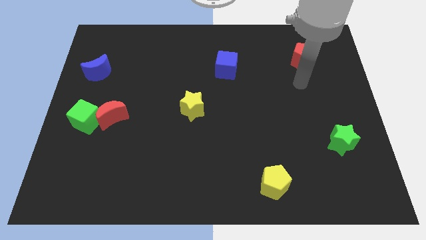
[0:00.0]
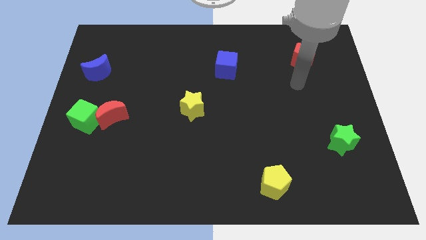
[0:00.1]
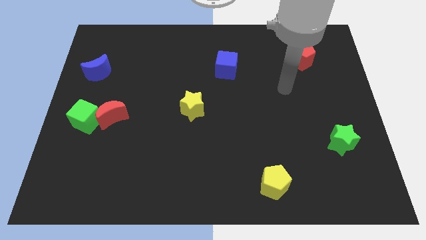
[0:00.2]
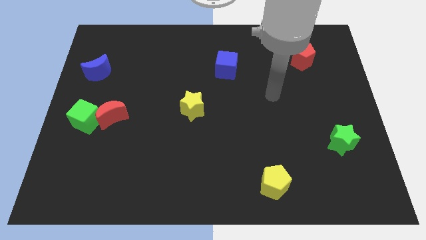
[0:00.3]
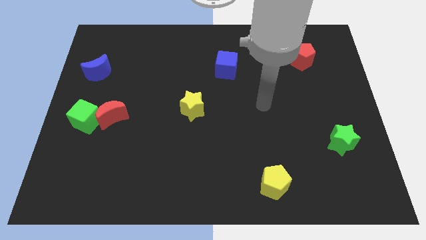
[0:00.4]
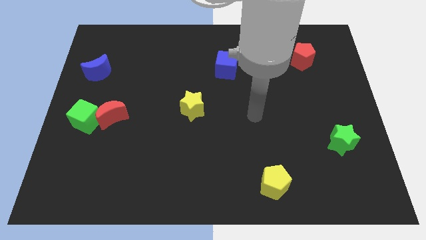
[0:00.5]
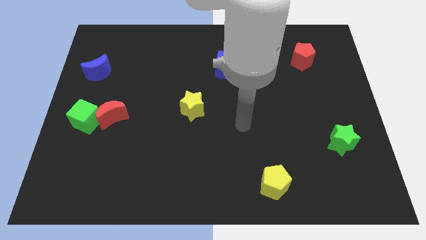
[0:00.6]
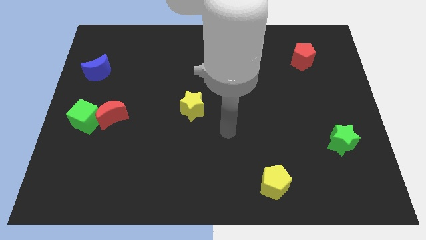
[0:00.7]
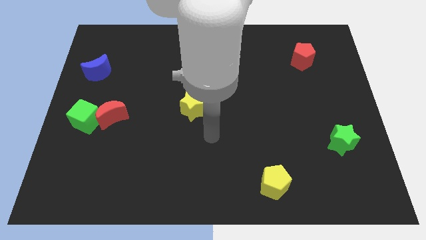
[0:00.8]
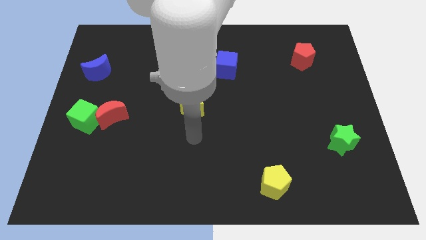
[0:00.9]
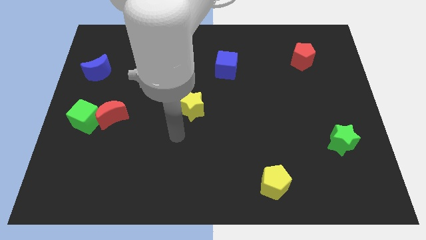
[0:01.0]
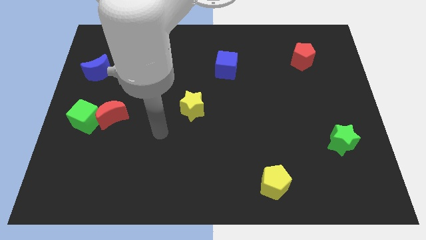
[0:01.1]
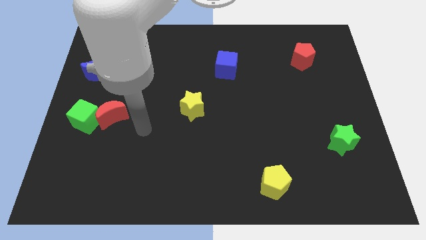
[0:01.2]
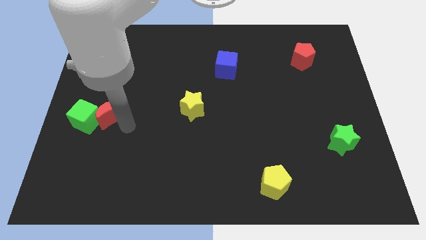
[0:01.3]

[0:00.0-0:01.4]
move your arm towards the red crescent

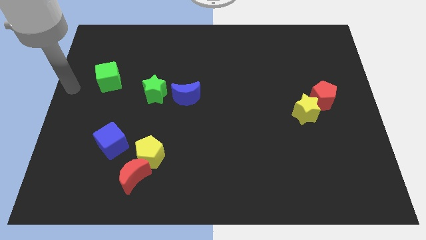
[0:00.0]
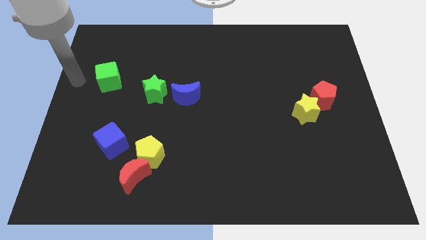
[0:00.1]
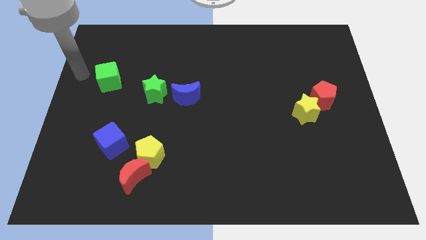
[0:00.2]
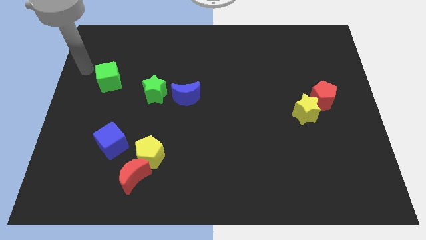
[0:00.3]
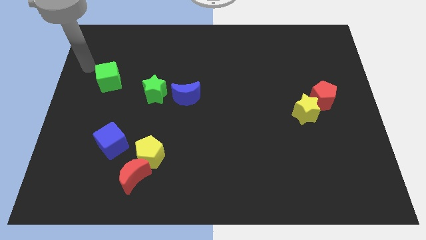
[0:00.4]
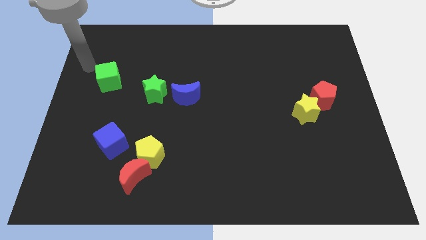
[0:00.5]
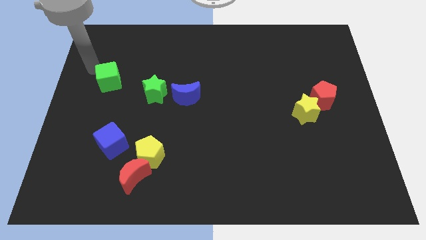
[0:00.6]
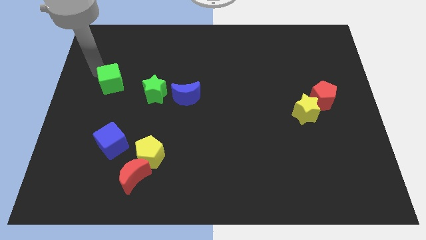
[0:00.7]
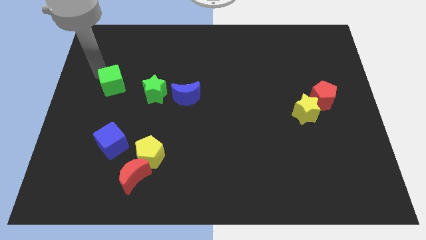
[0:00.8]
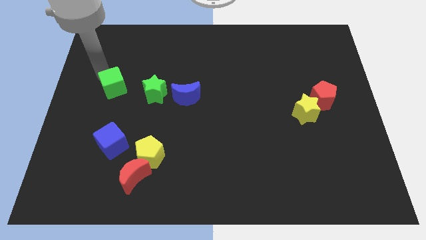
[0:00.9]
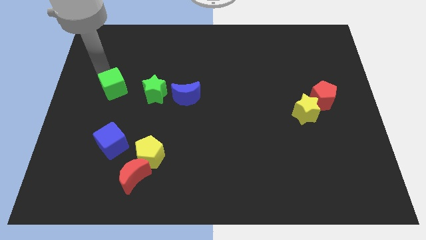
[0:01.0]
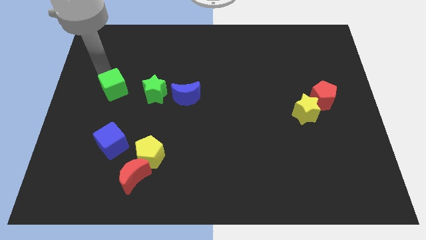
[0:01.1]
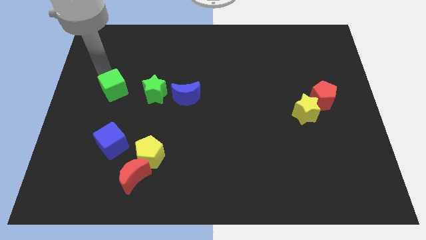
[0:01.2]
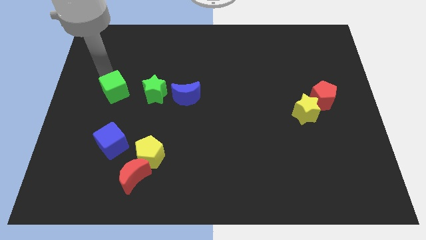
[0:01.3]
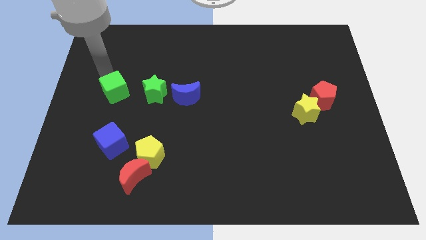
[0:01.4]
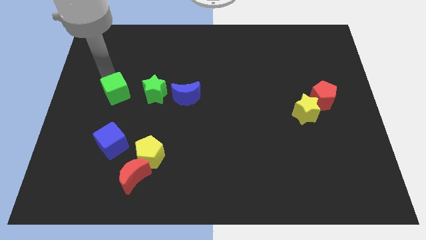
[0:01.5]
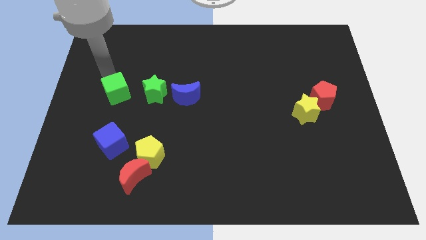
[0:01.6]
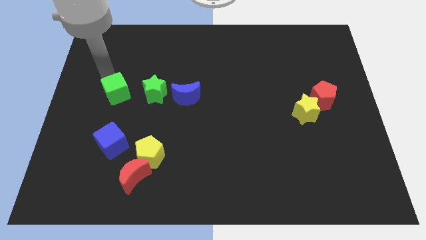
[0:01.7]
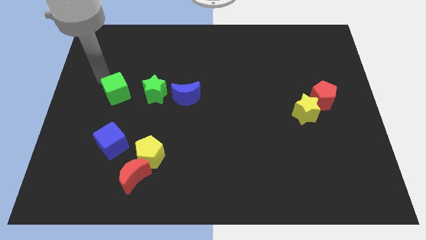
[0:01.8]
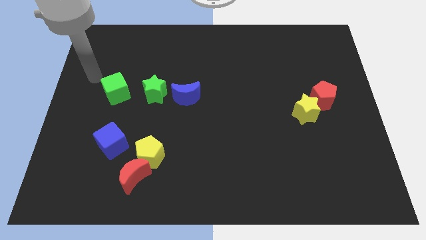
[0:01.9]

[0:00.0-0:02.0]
move the green cube to the left of the green star

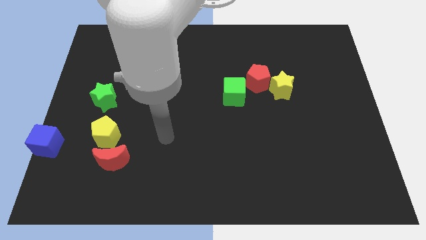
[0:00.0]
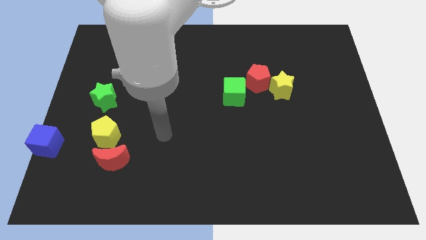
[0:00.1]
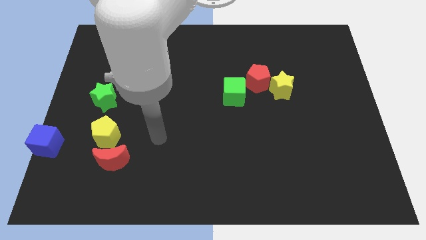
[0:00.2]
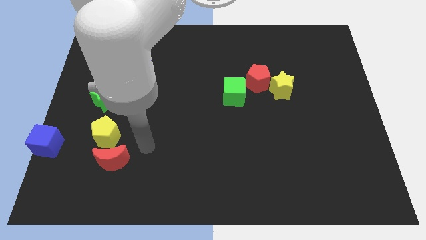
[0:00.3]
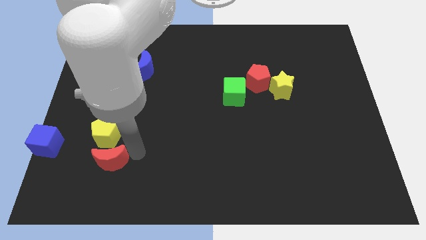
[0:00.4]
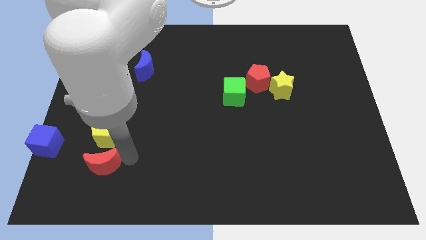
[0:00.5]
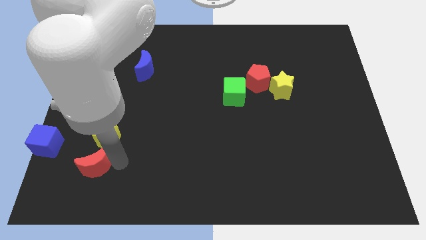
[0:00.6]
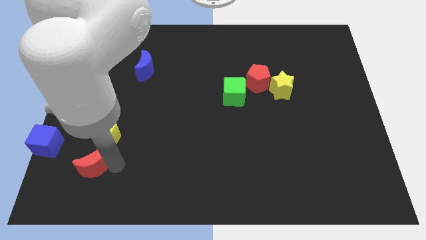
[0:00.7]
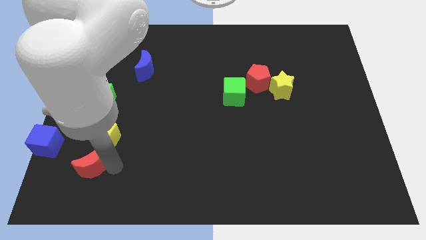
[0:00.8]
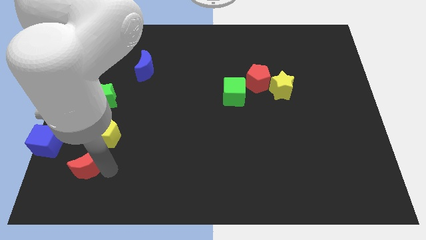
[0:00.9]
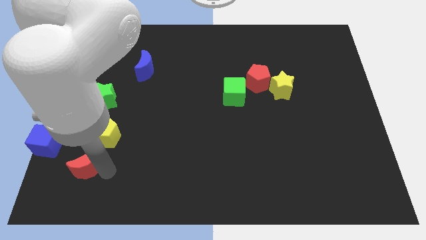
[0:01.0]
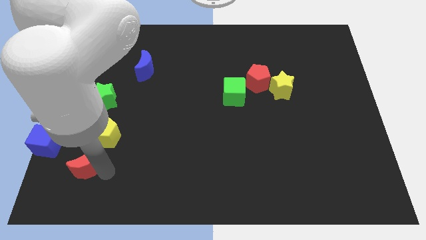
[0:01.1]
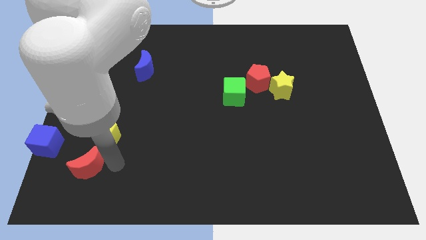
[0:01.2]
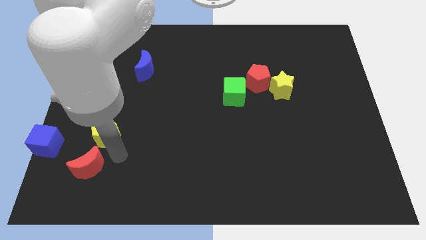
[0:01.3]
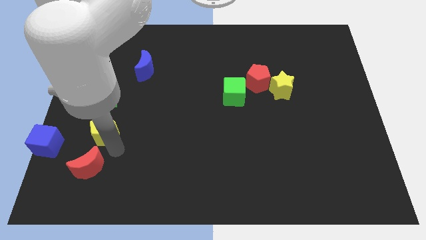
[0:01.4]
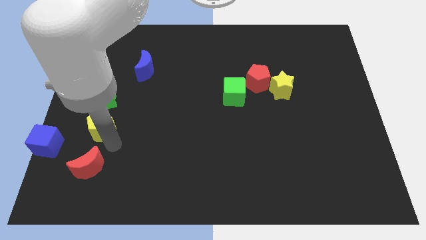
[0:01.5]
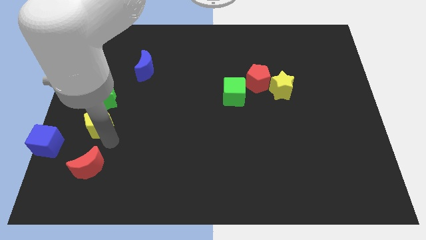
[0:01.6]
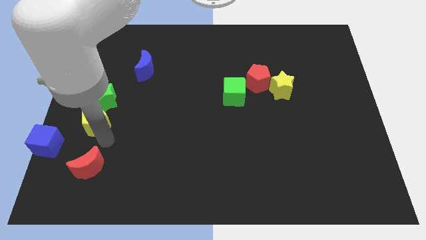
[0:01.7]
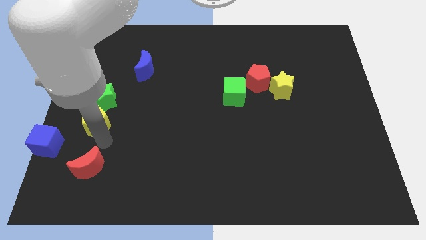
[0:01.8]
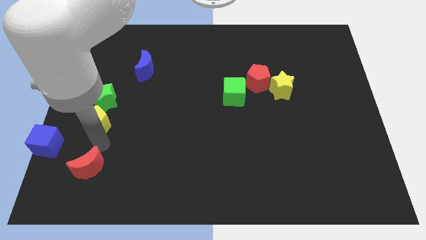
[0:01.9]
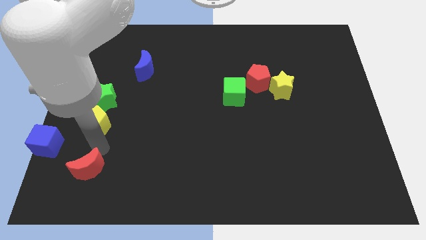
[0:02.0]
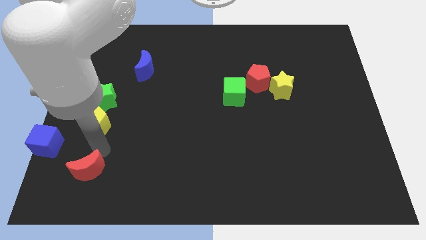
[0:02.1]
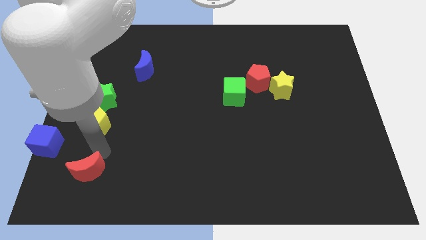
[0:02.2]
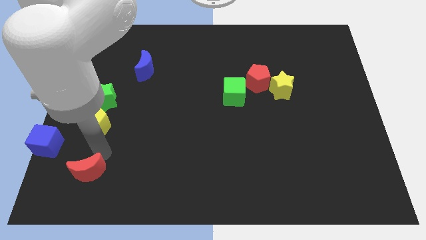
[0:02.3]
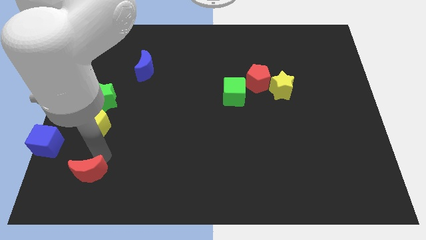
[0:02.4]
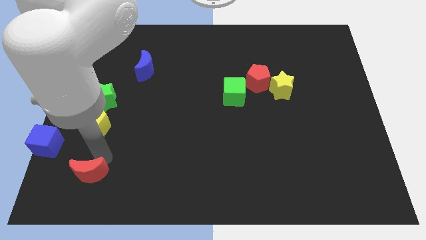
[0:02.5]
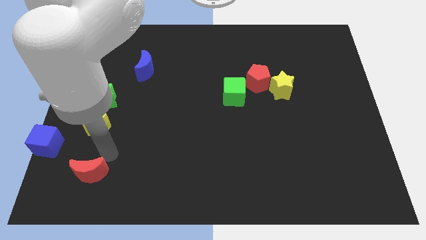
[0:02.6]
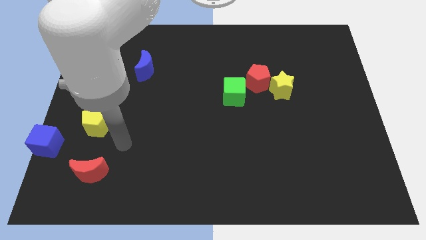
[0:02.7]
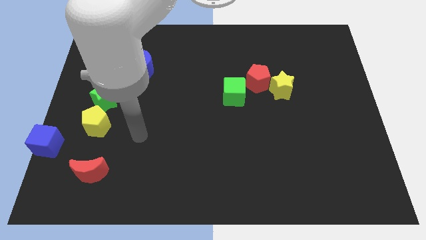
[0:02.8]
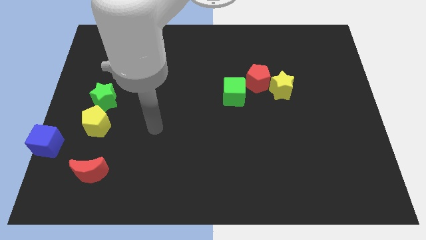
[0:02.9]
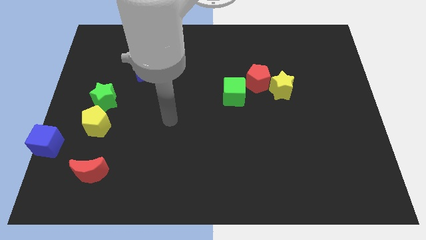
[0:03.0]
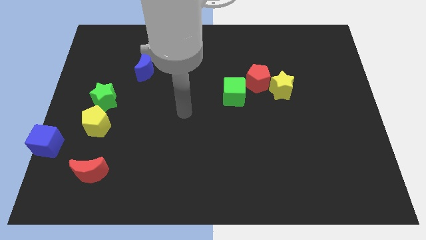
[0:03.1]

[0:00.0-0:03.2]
separate yellow pentagon and red moon from each other

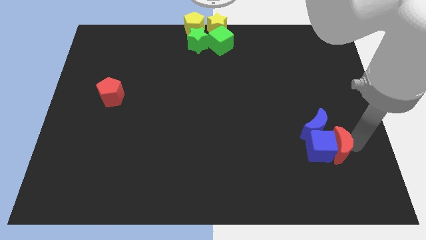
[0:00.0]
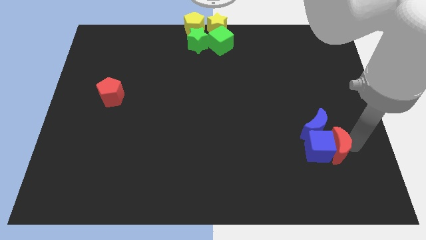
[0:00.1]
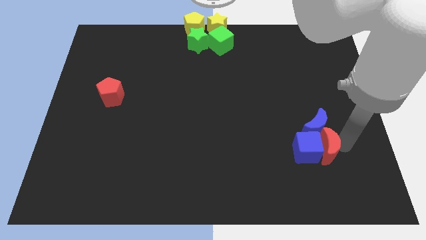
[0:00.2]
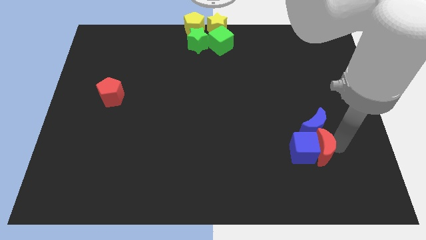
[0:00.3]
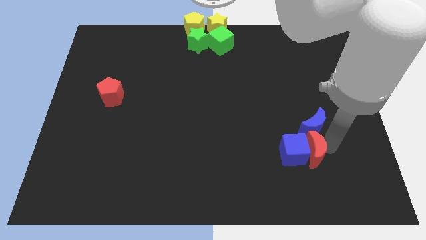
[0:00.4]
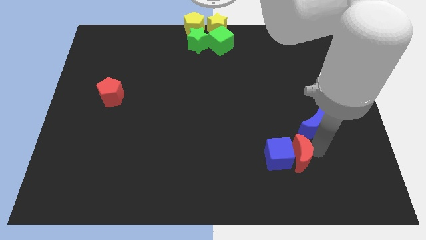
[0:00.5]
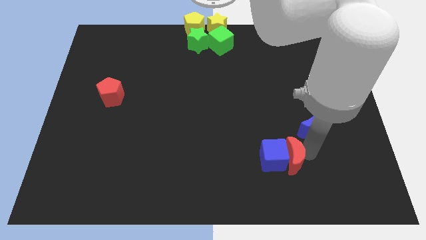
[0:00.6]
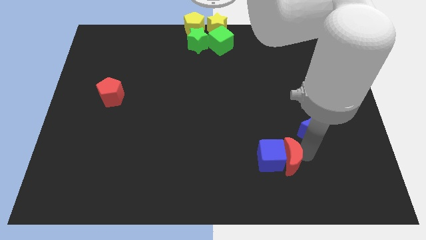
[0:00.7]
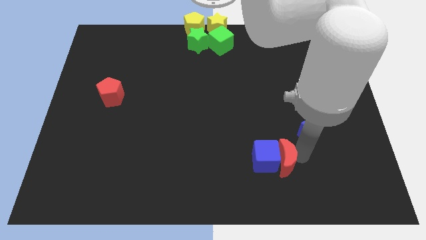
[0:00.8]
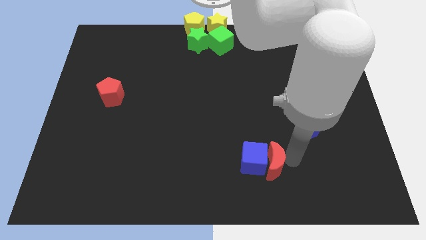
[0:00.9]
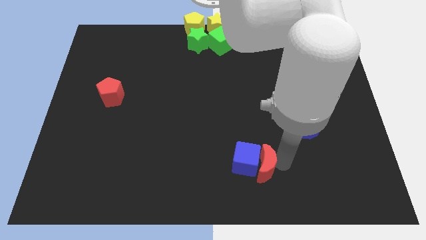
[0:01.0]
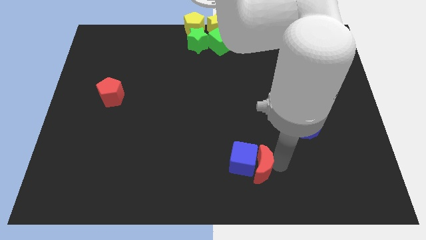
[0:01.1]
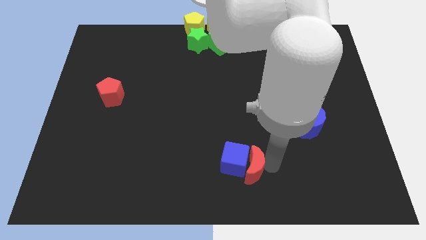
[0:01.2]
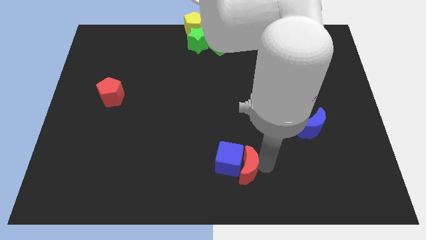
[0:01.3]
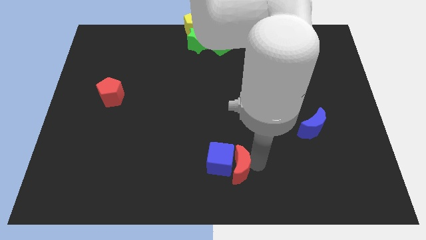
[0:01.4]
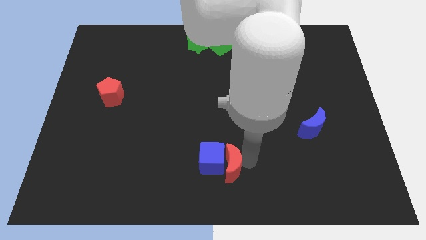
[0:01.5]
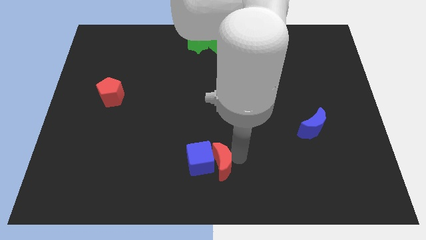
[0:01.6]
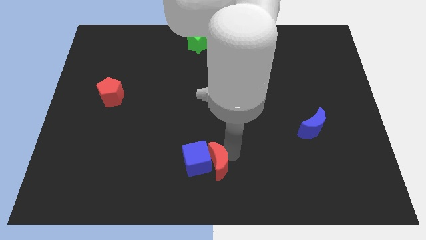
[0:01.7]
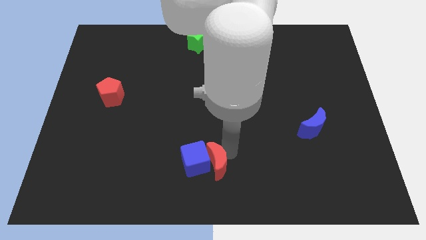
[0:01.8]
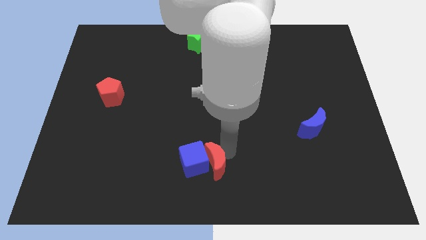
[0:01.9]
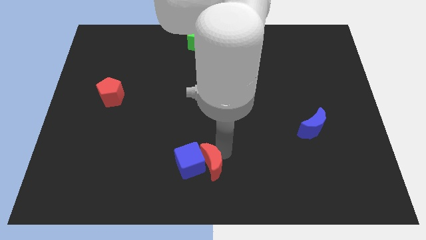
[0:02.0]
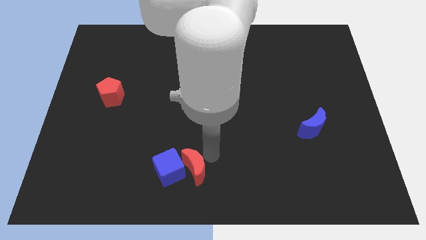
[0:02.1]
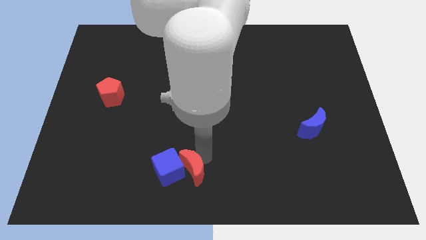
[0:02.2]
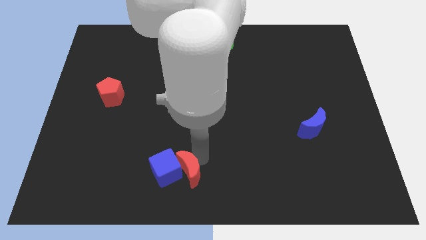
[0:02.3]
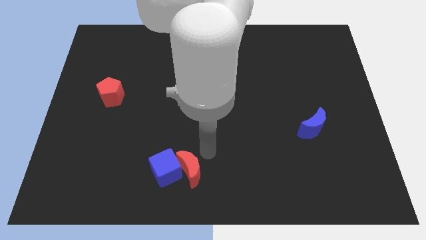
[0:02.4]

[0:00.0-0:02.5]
separate the blue cube and red crescent from the blue crescent

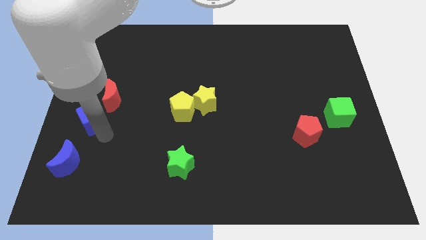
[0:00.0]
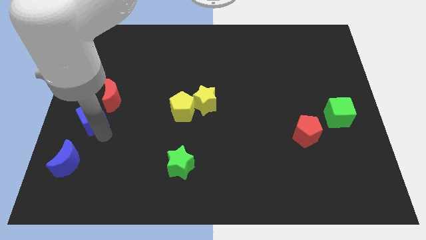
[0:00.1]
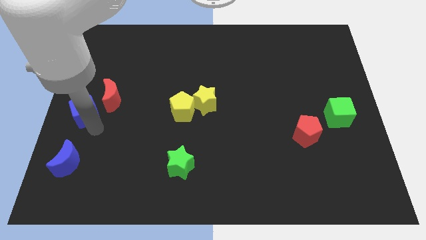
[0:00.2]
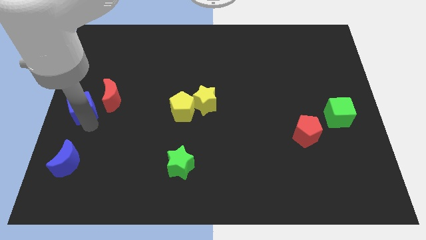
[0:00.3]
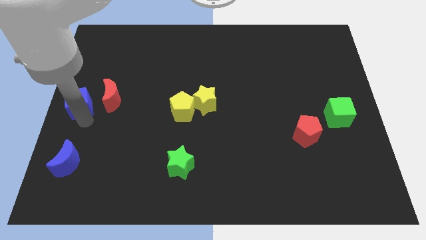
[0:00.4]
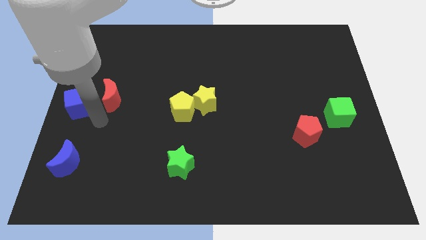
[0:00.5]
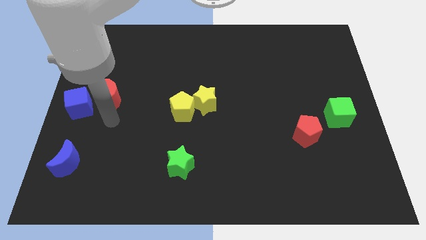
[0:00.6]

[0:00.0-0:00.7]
push the blue cube to the center left of the board
